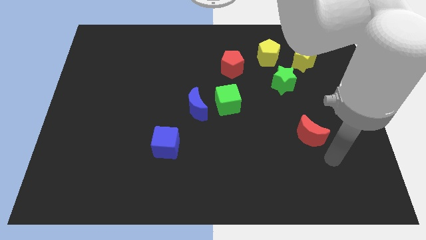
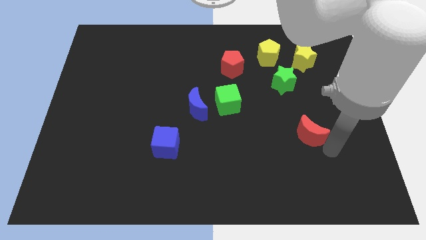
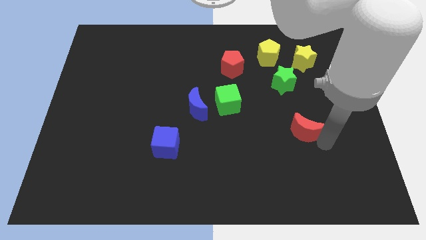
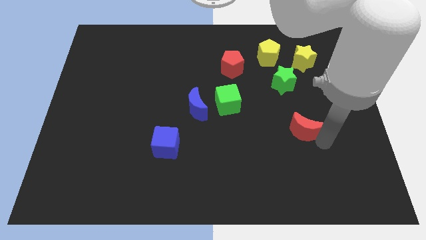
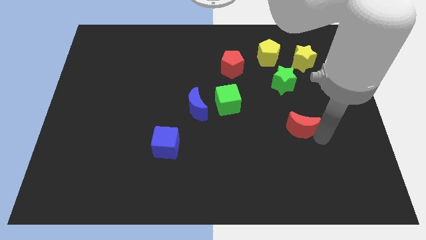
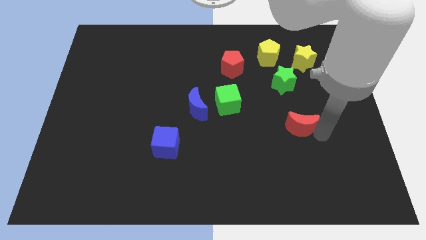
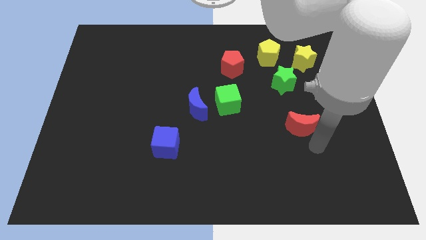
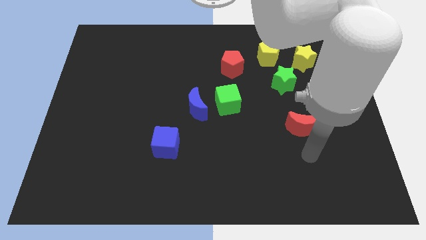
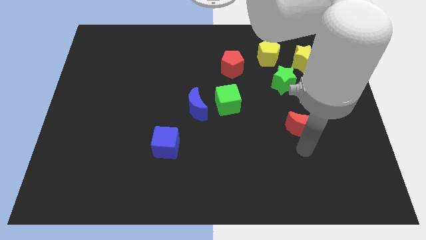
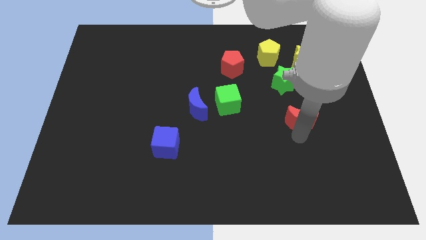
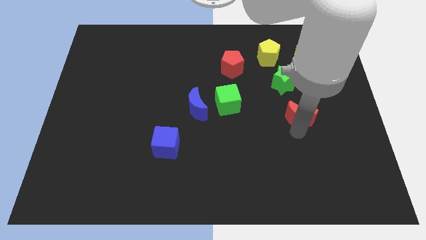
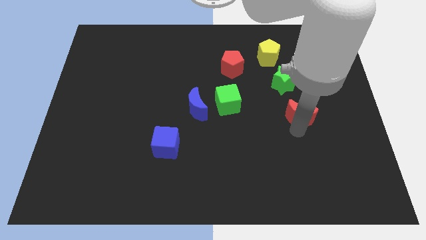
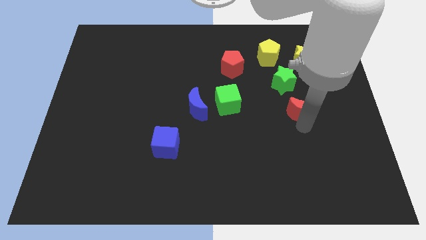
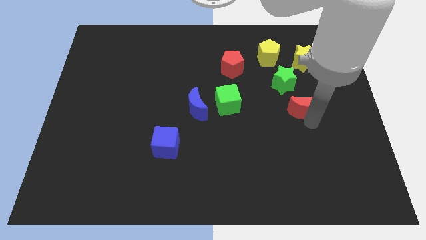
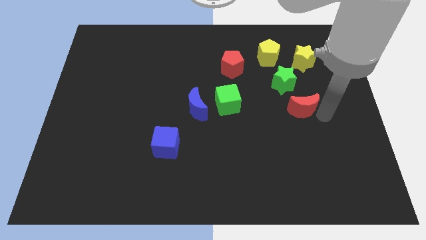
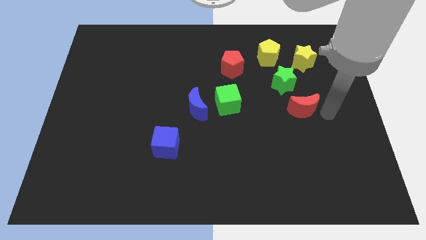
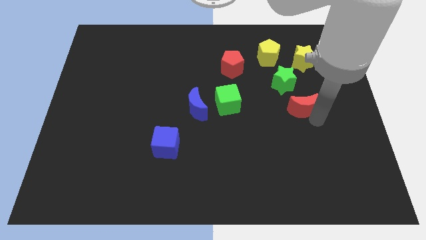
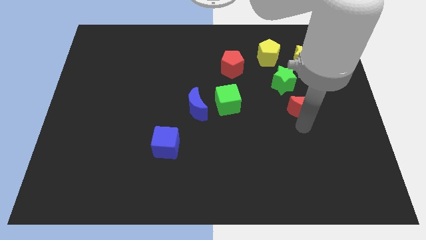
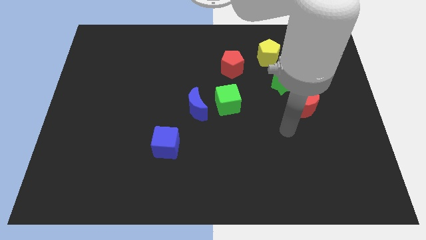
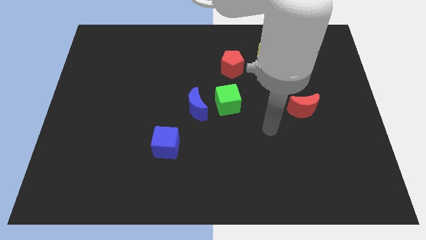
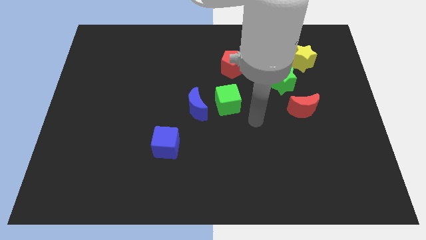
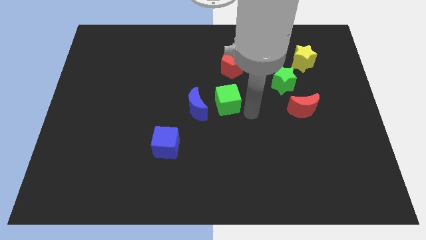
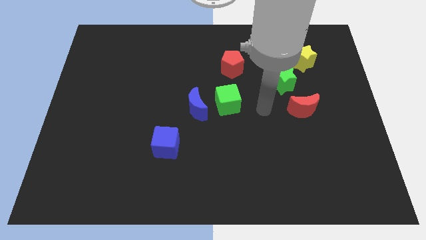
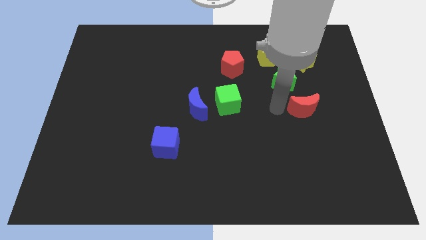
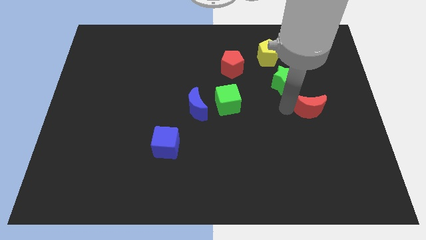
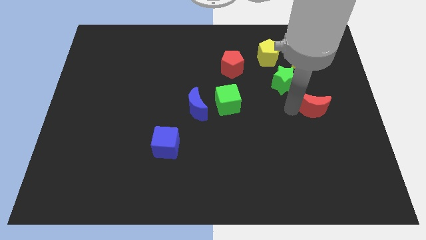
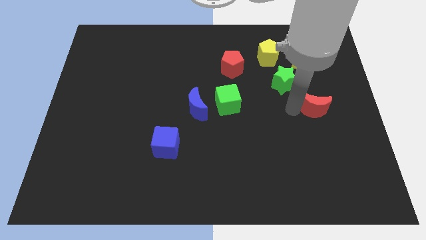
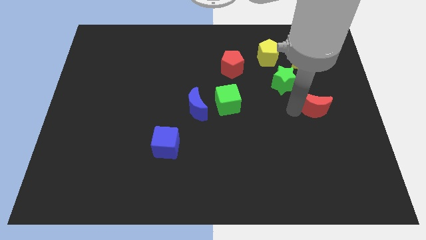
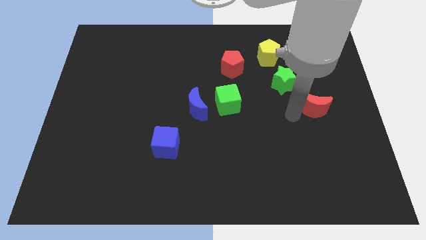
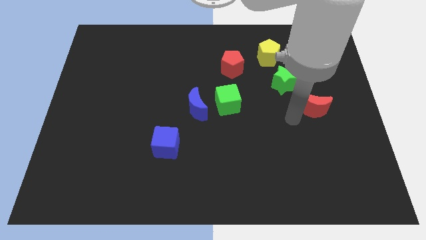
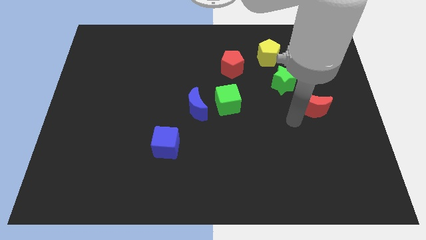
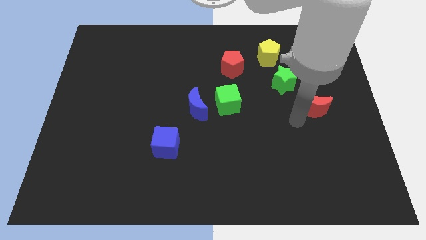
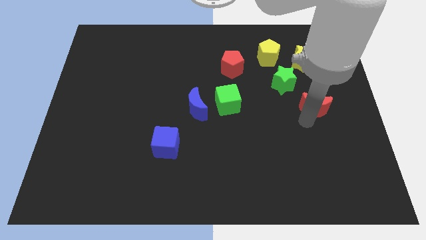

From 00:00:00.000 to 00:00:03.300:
move the red moon slightly towards the right side of the board

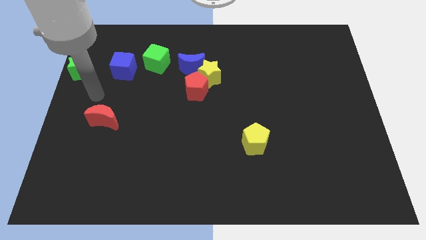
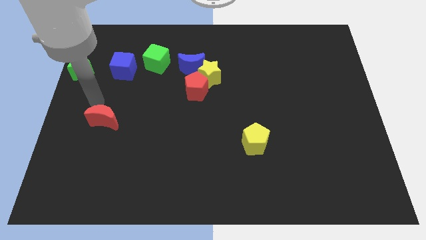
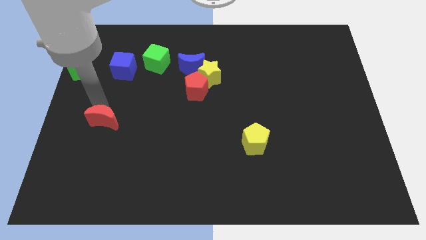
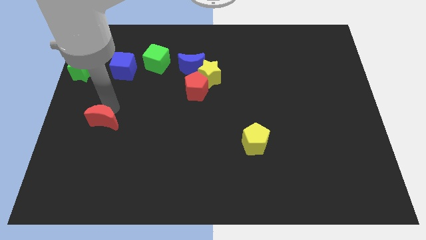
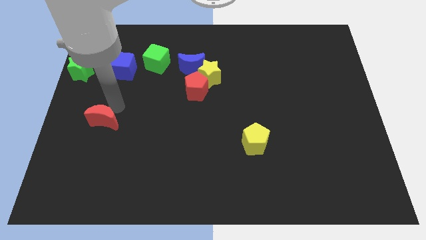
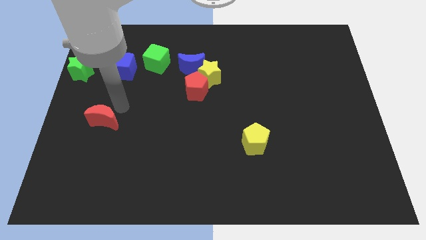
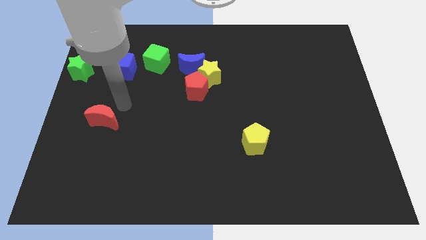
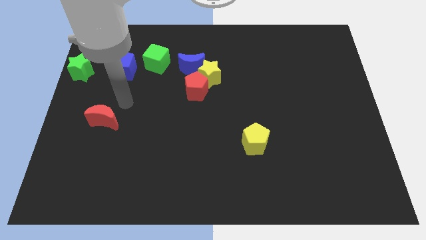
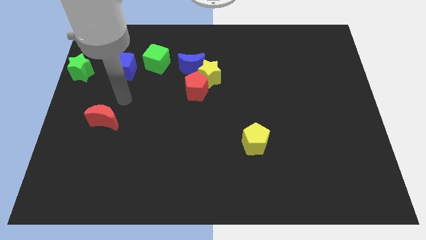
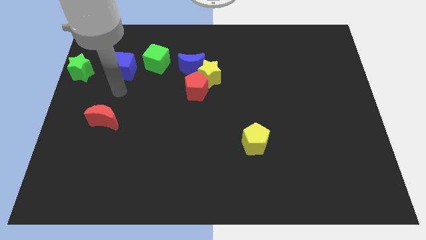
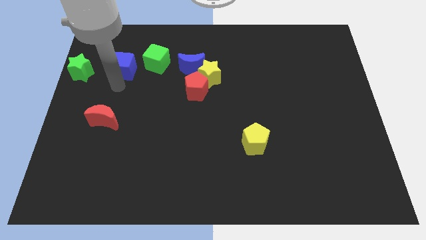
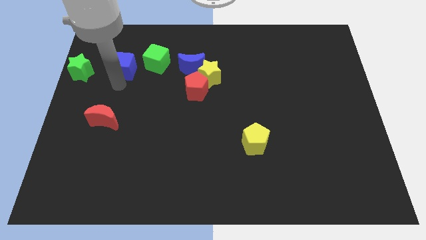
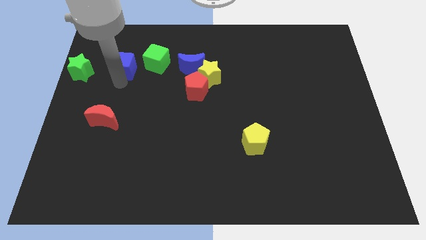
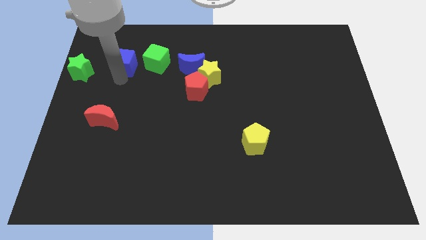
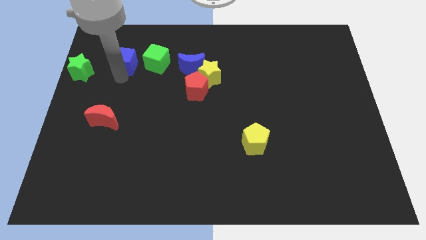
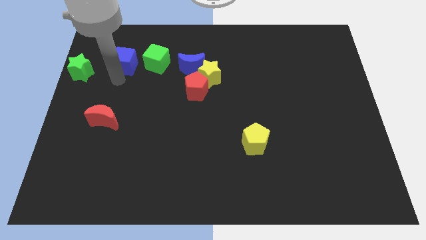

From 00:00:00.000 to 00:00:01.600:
place the arm towards the down blue cube

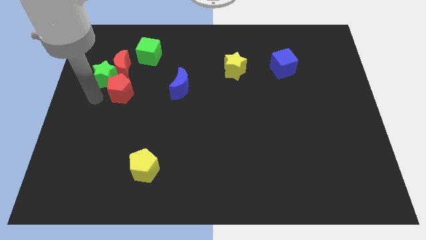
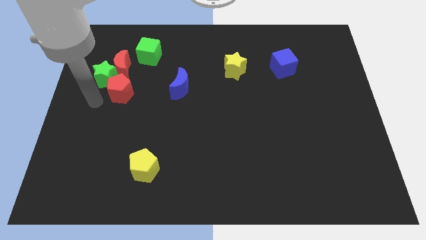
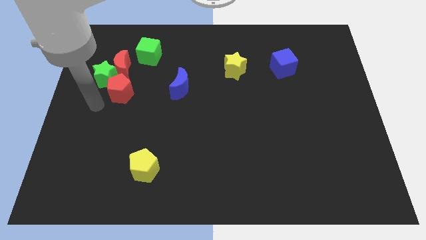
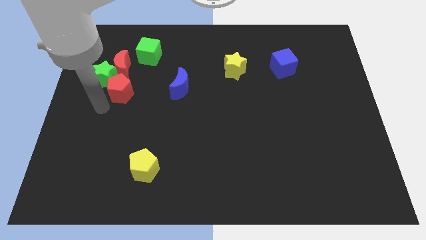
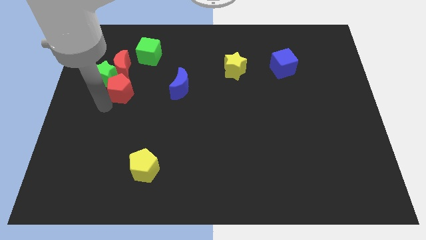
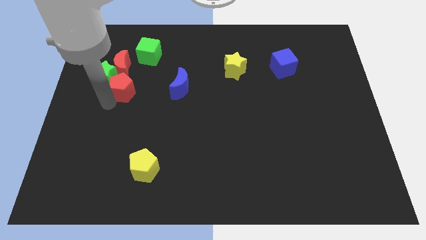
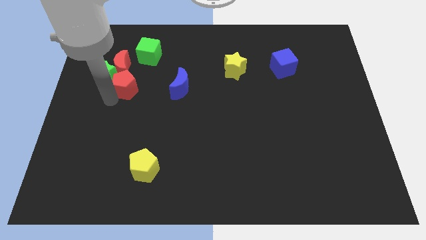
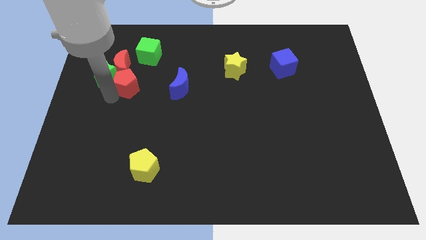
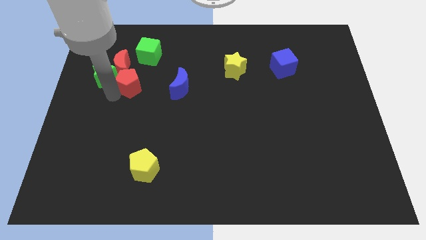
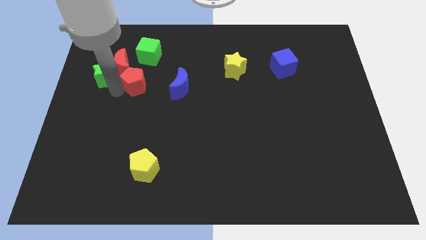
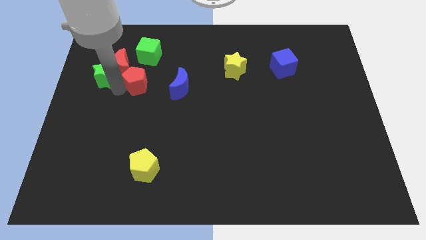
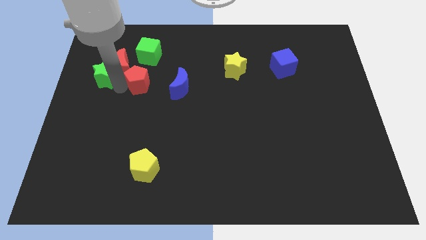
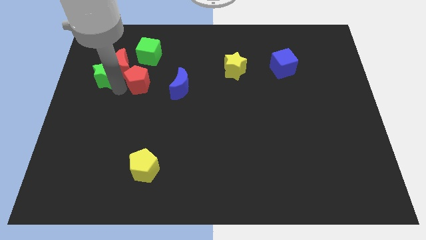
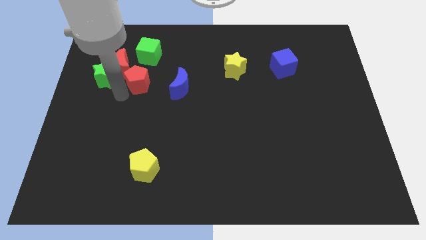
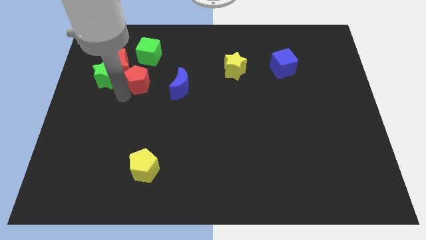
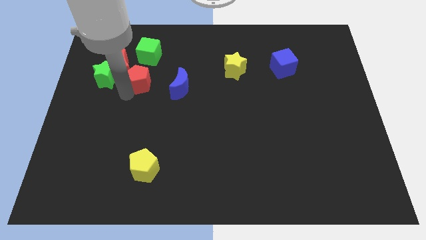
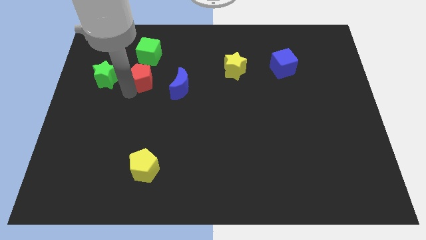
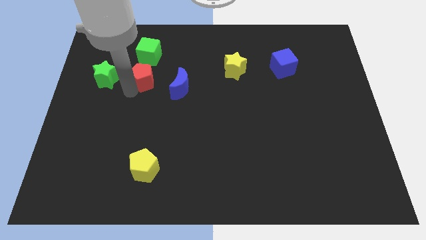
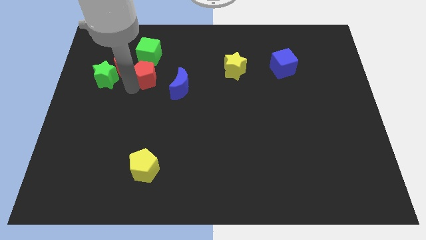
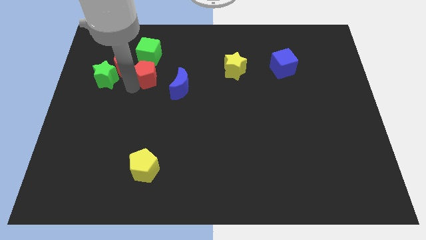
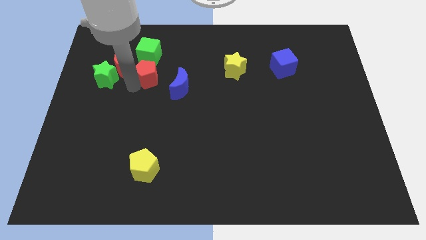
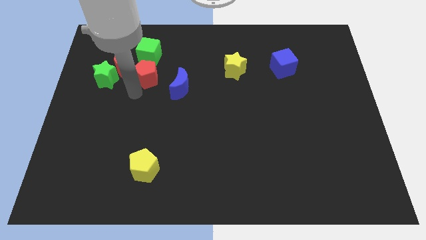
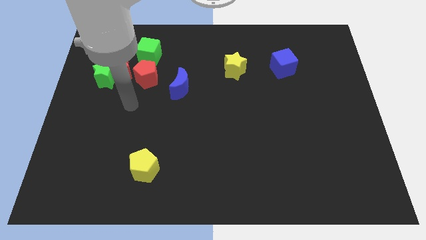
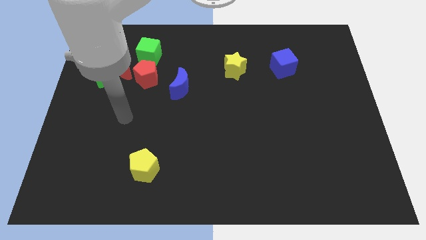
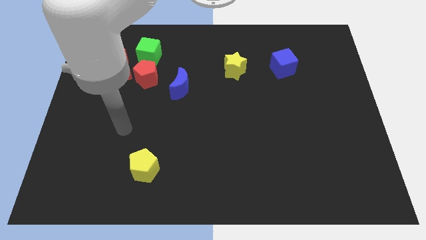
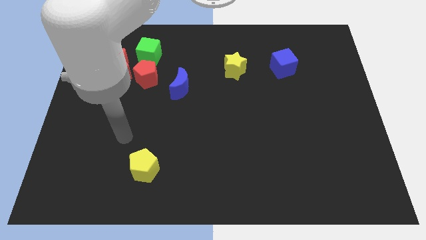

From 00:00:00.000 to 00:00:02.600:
place the red pentagon in between the red crescent and blue crescent

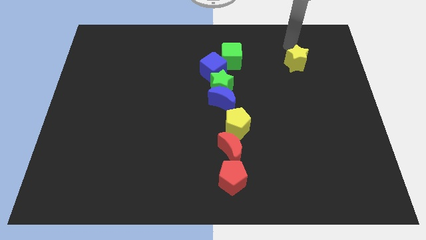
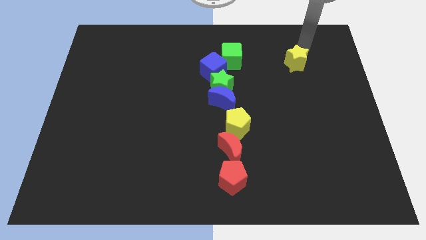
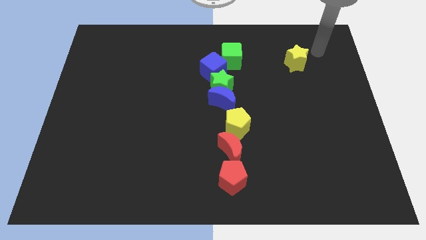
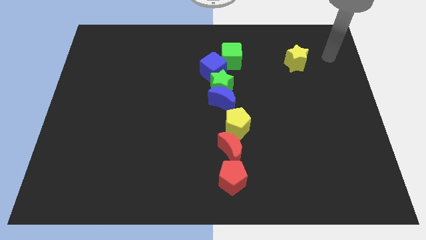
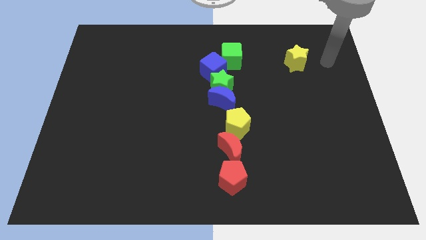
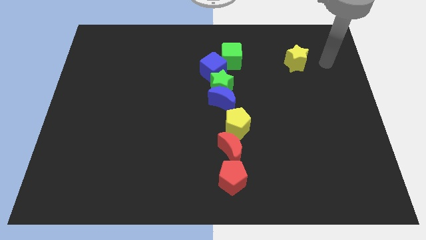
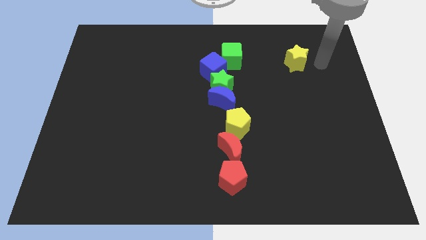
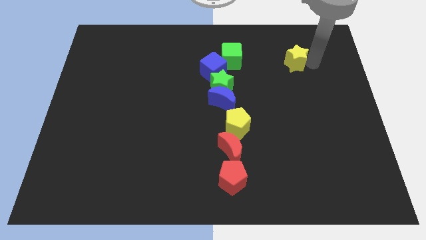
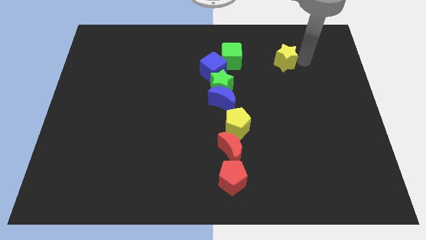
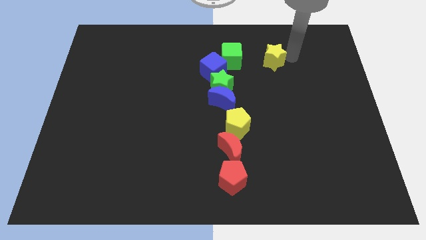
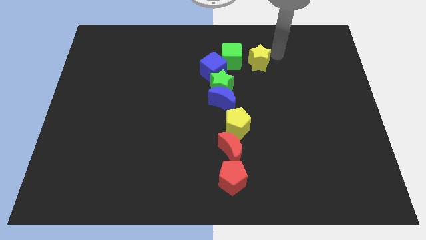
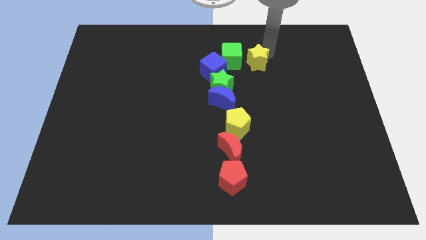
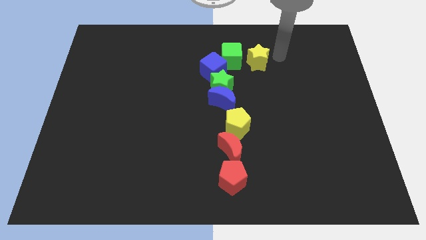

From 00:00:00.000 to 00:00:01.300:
push the yellow star close to the green cube

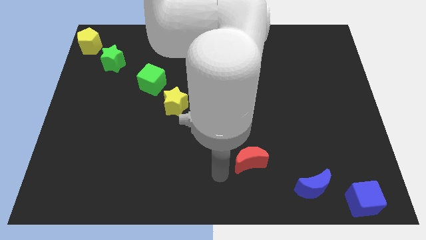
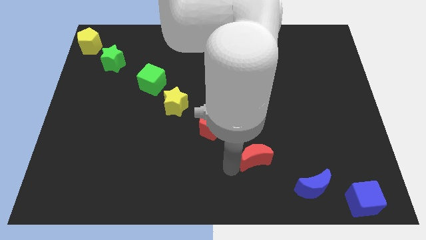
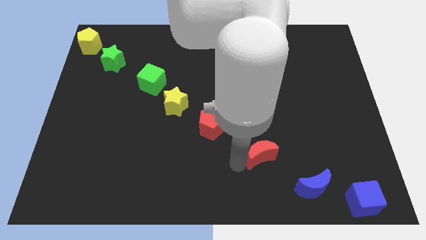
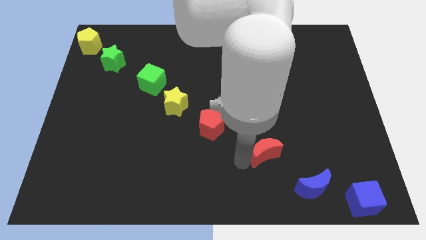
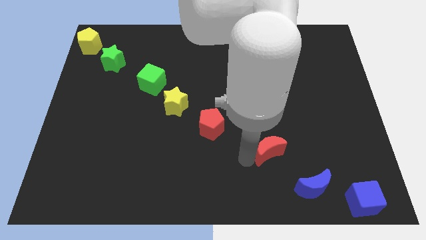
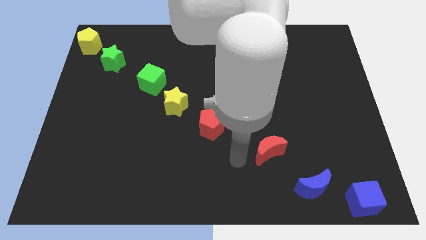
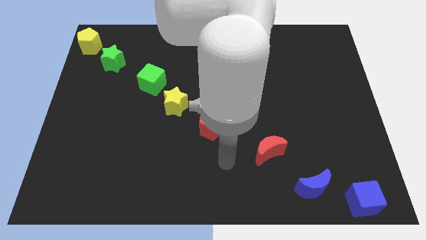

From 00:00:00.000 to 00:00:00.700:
place the red moon in between the blue moon and red pentagon
